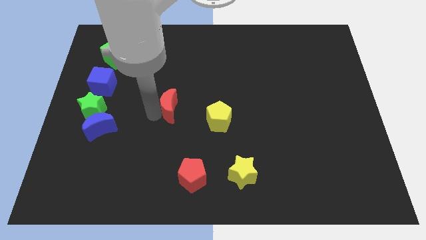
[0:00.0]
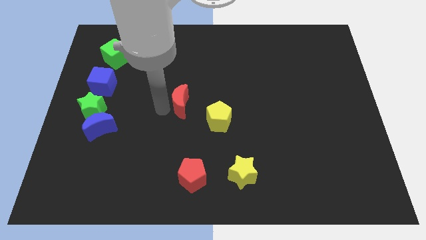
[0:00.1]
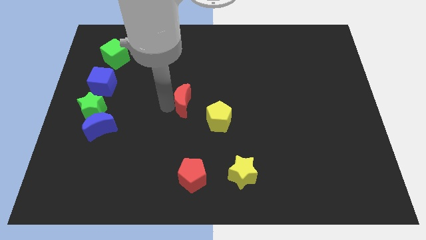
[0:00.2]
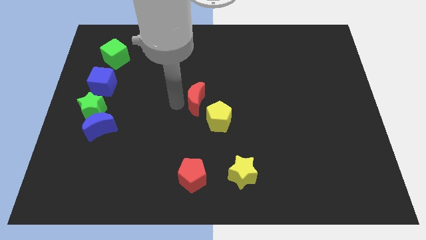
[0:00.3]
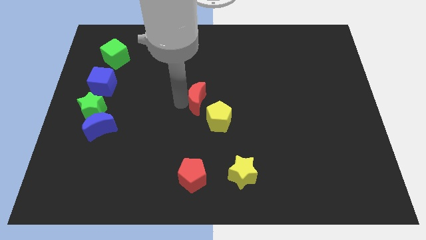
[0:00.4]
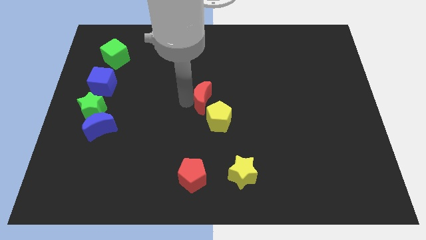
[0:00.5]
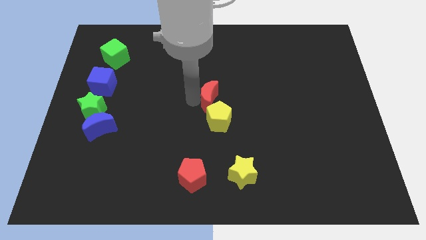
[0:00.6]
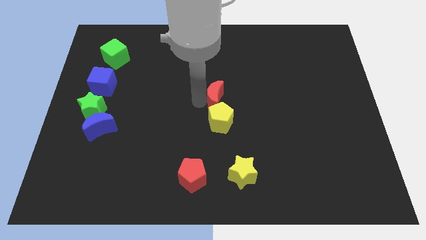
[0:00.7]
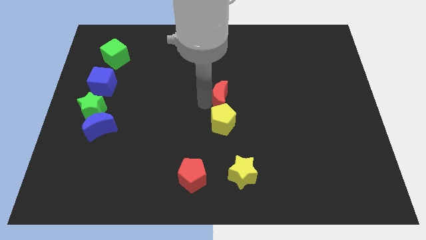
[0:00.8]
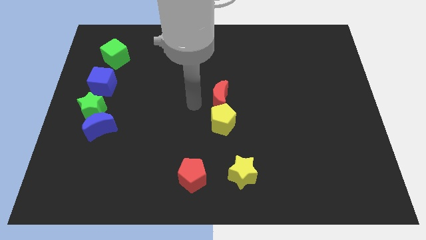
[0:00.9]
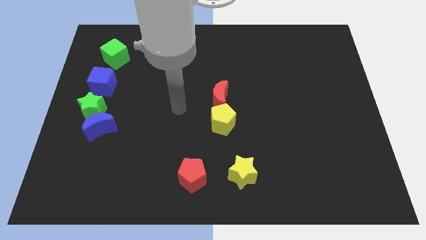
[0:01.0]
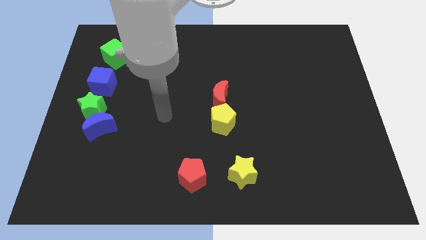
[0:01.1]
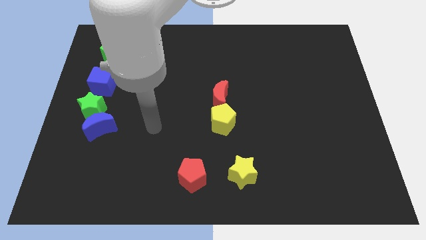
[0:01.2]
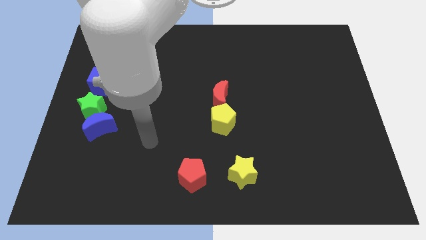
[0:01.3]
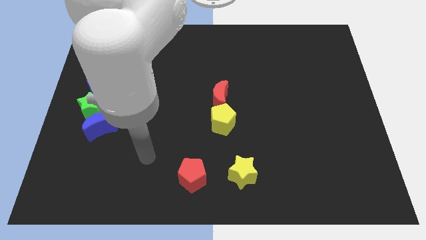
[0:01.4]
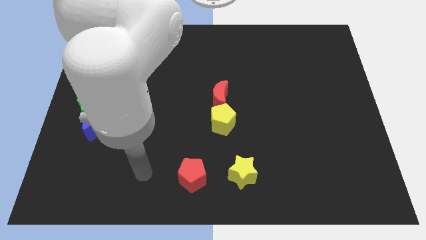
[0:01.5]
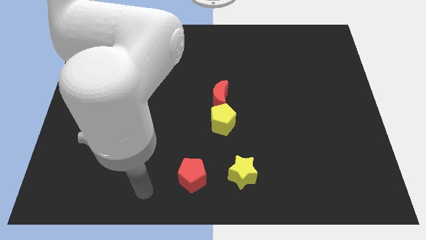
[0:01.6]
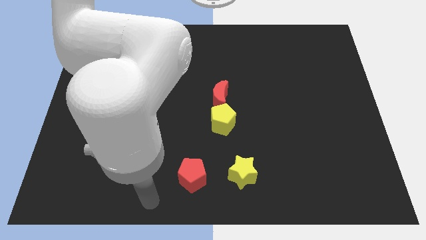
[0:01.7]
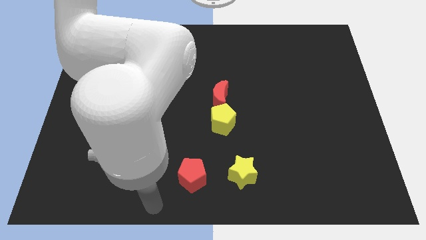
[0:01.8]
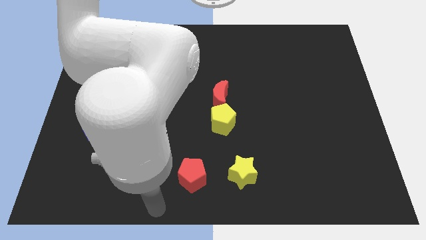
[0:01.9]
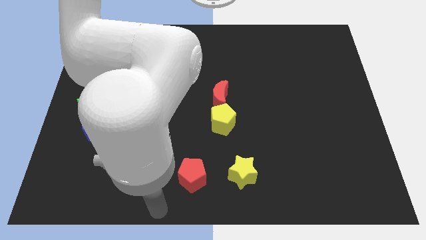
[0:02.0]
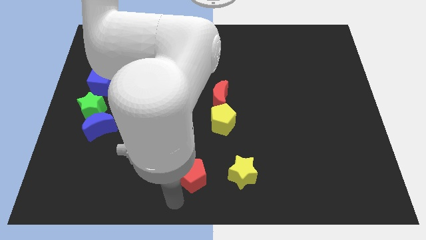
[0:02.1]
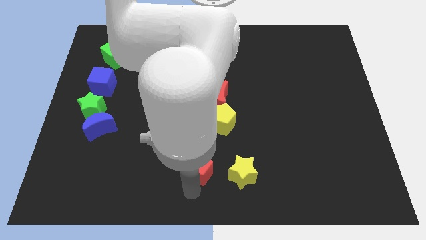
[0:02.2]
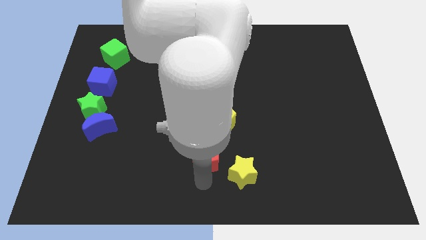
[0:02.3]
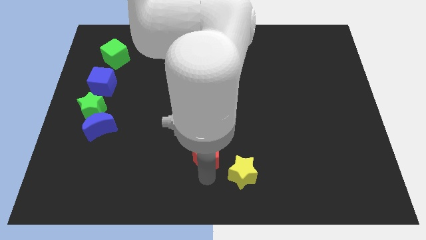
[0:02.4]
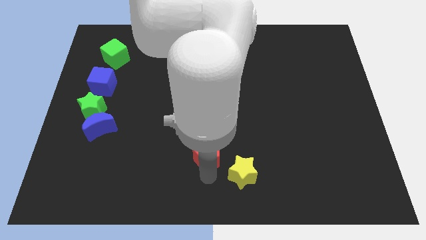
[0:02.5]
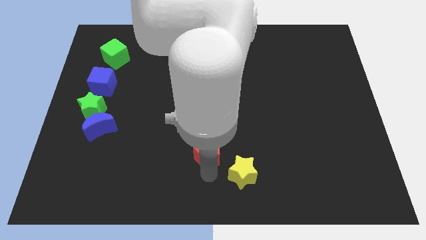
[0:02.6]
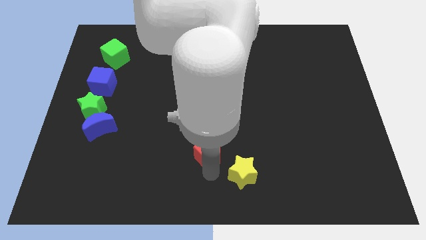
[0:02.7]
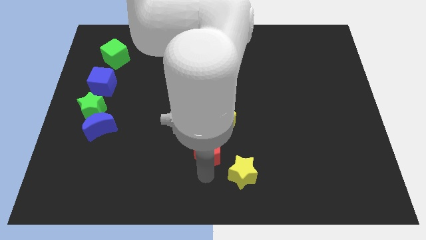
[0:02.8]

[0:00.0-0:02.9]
place the red pentagon diagonal to the yellow star

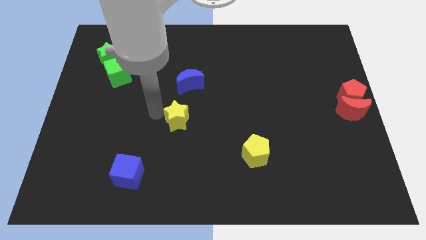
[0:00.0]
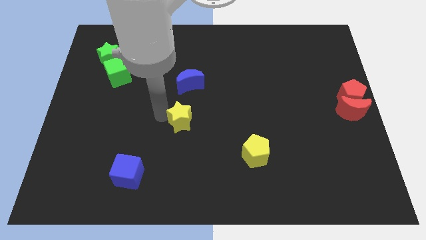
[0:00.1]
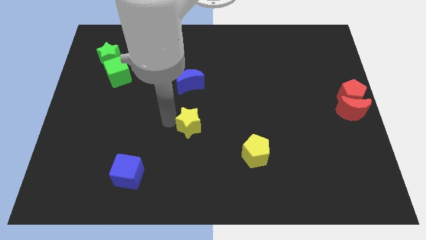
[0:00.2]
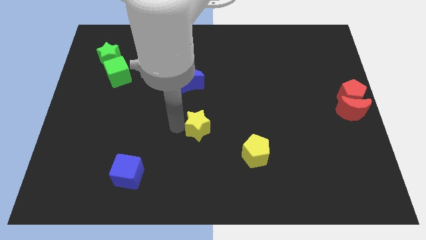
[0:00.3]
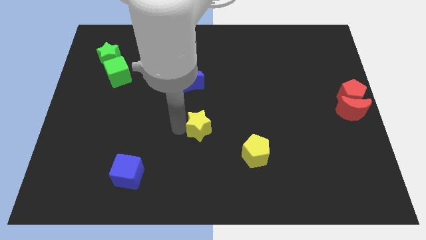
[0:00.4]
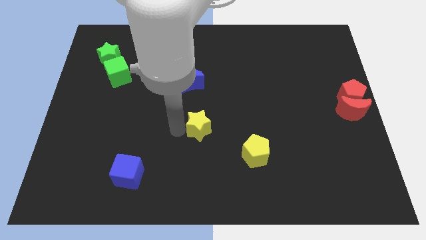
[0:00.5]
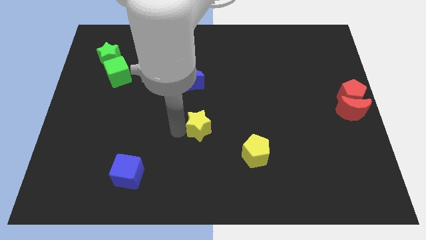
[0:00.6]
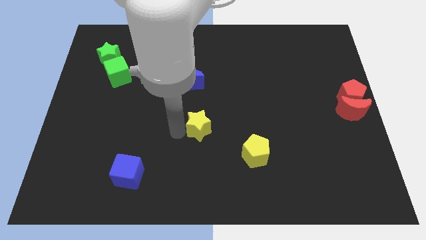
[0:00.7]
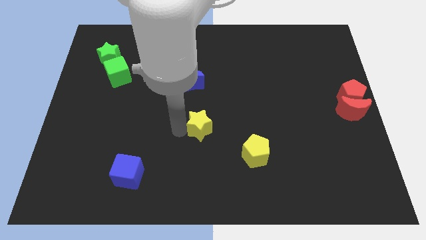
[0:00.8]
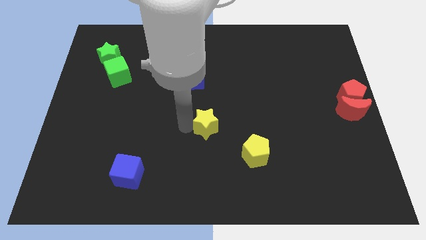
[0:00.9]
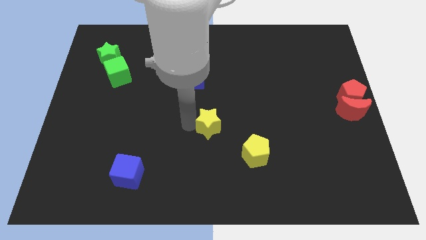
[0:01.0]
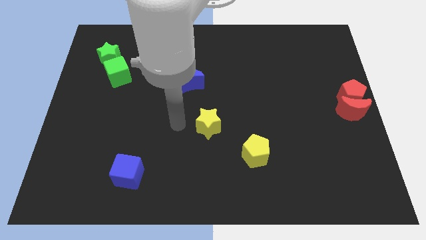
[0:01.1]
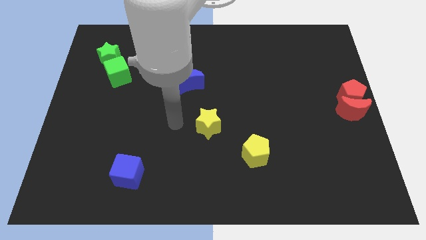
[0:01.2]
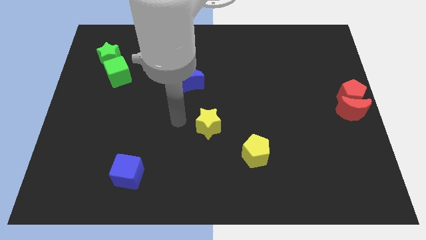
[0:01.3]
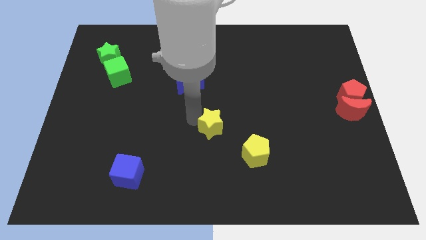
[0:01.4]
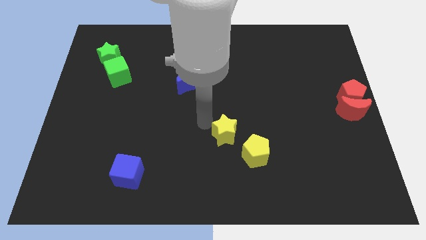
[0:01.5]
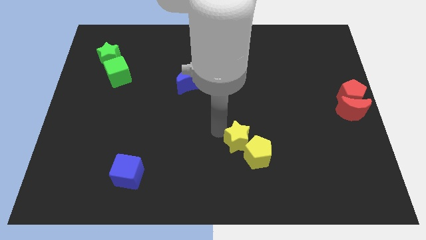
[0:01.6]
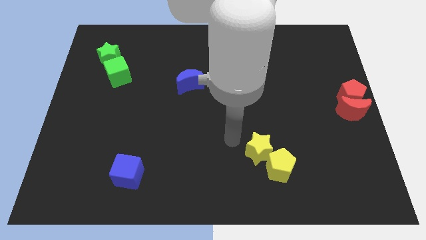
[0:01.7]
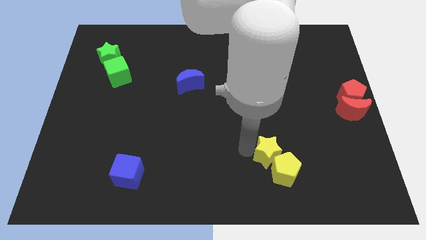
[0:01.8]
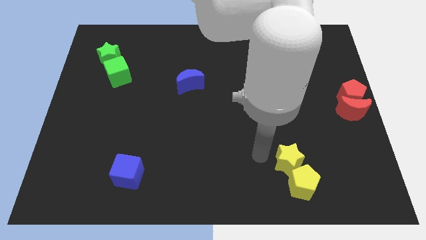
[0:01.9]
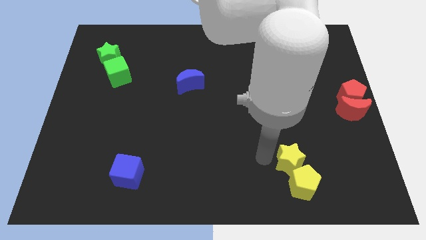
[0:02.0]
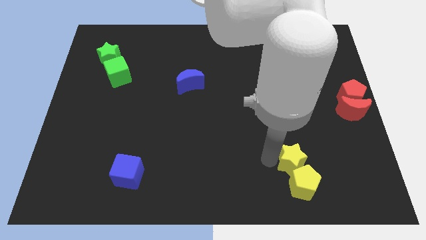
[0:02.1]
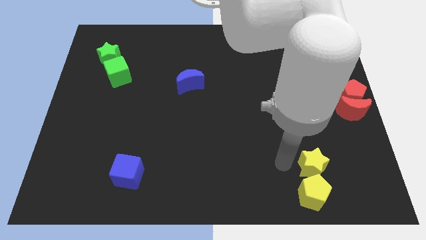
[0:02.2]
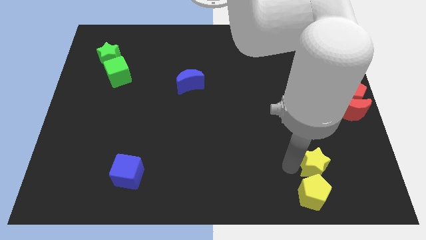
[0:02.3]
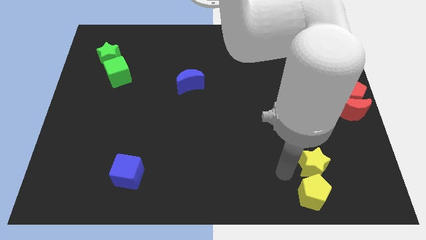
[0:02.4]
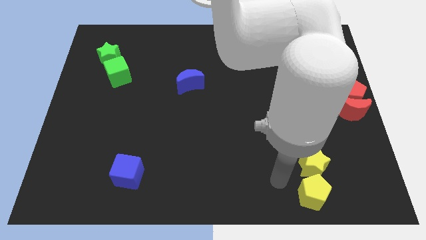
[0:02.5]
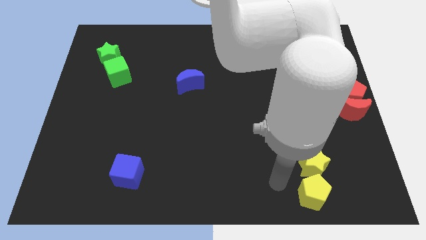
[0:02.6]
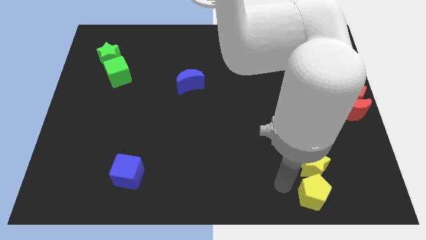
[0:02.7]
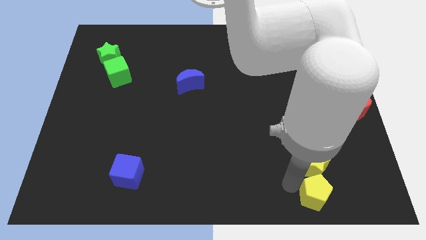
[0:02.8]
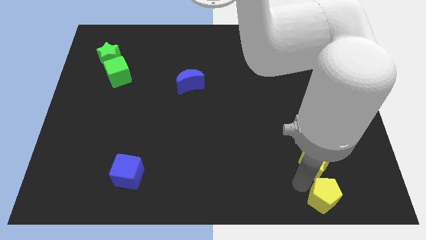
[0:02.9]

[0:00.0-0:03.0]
push the yellow pentagon with the yellow star towards the bottom left corner

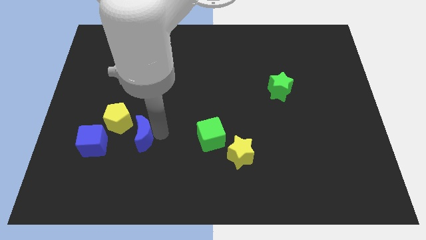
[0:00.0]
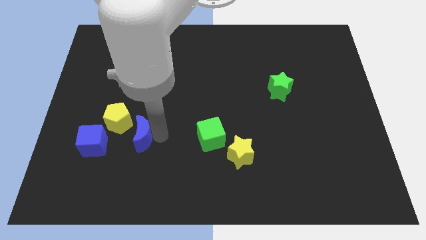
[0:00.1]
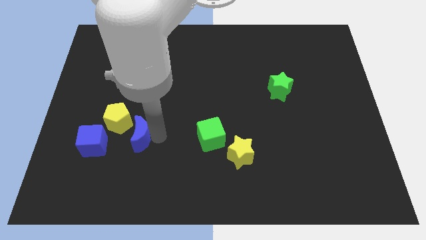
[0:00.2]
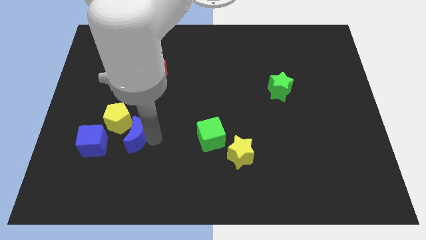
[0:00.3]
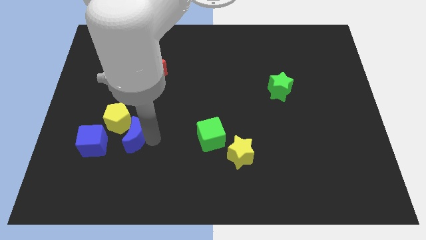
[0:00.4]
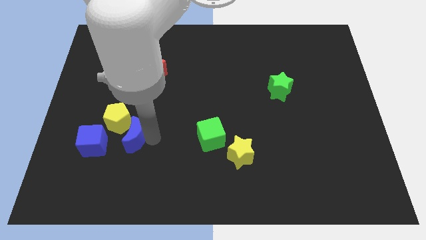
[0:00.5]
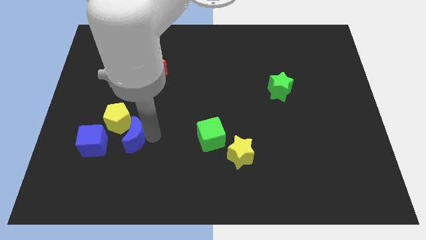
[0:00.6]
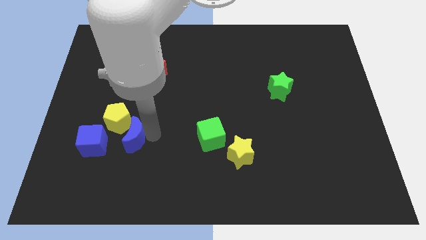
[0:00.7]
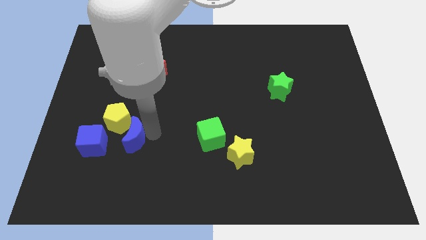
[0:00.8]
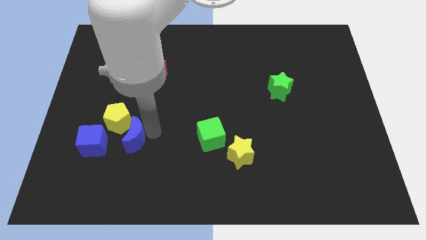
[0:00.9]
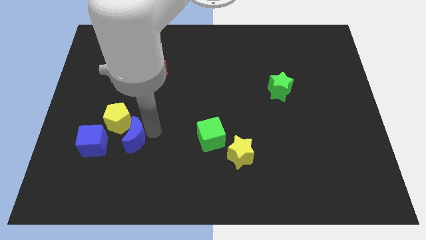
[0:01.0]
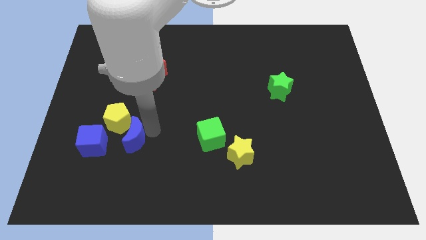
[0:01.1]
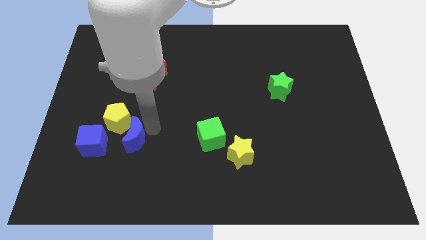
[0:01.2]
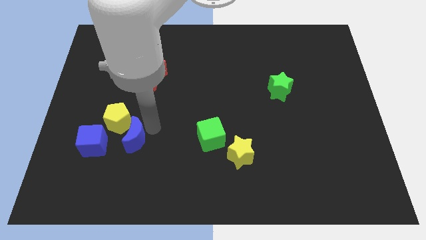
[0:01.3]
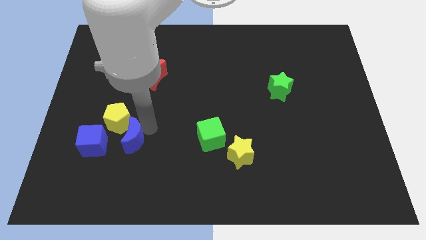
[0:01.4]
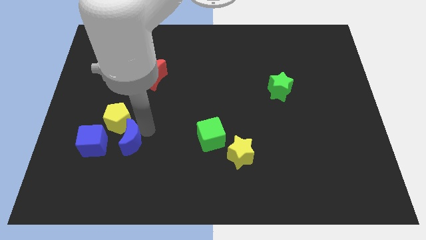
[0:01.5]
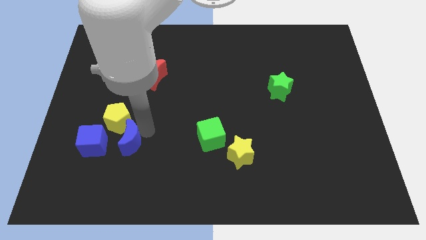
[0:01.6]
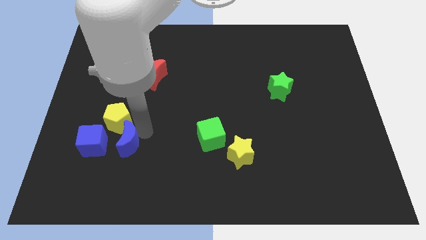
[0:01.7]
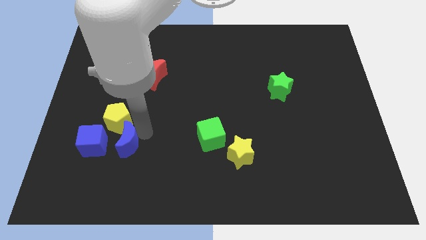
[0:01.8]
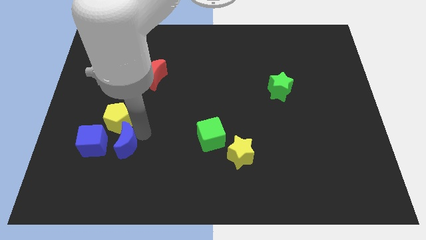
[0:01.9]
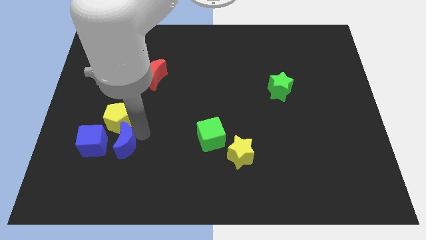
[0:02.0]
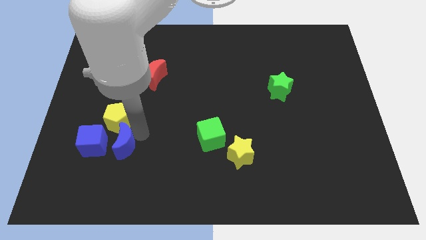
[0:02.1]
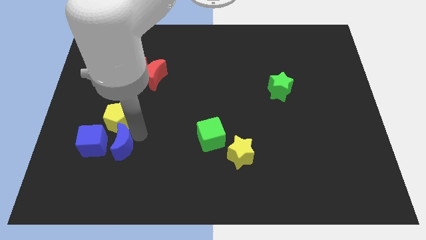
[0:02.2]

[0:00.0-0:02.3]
push the blue crescent to the bottom of the yellow pentagon

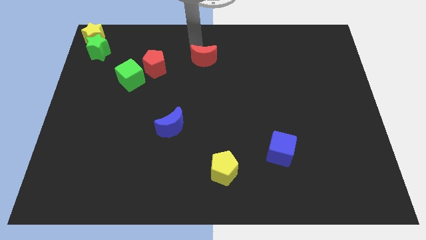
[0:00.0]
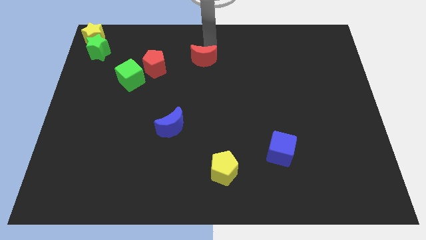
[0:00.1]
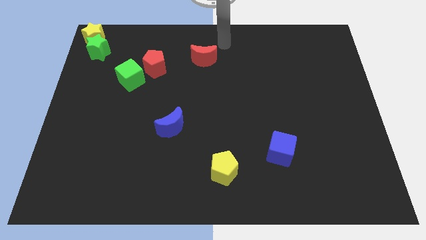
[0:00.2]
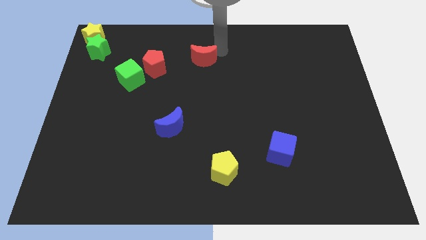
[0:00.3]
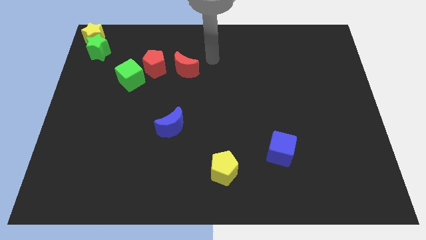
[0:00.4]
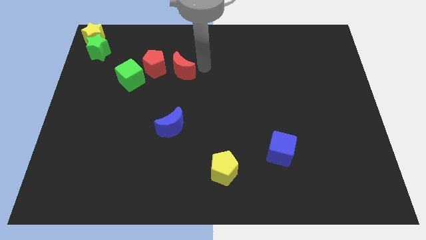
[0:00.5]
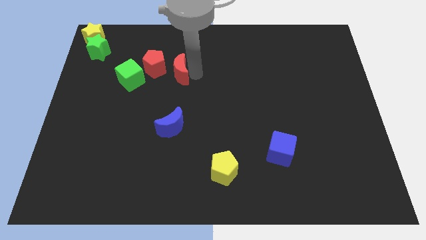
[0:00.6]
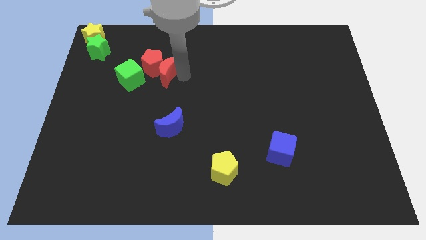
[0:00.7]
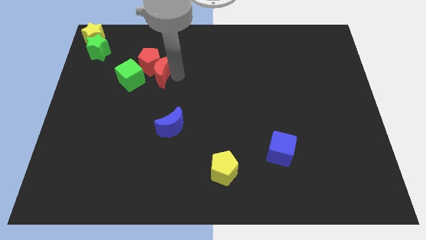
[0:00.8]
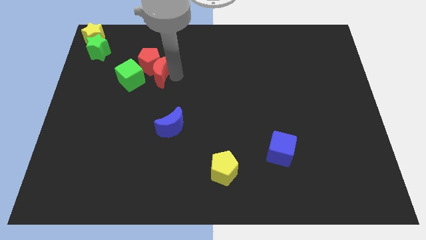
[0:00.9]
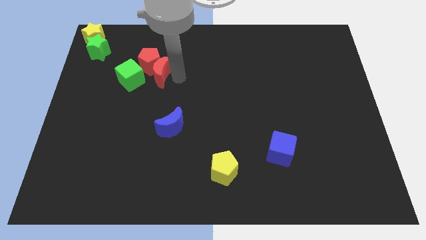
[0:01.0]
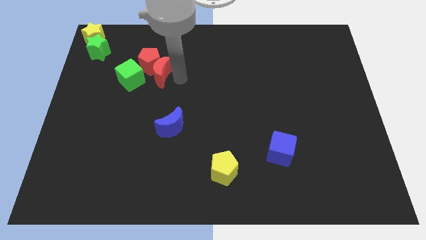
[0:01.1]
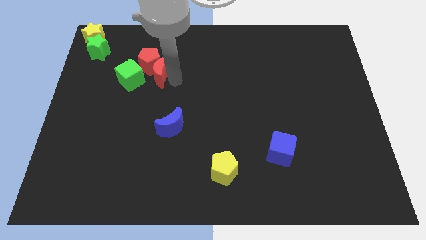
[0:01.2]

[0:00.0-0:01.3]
drag the red moon into the right side of the red pentagon
